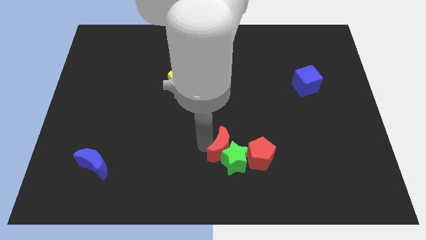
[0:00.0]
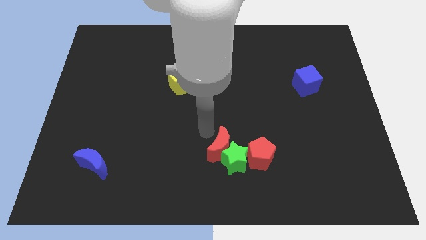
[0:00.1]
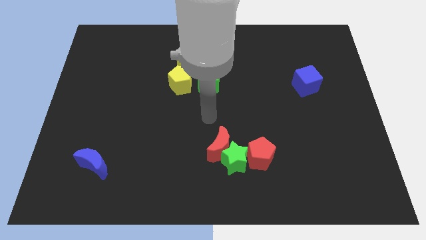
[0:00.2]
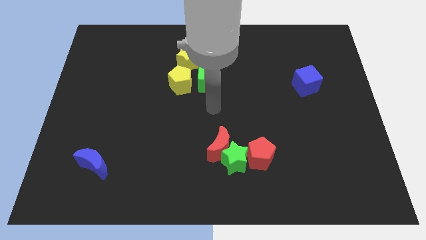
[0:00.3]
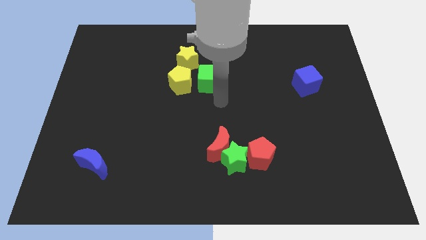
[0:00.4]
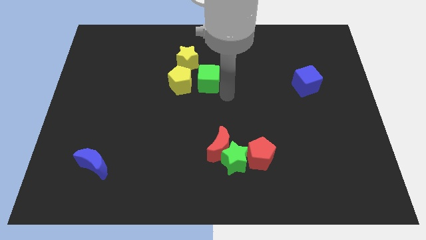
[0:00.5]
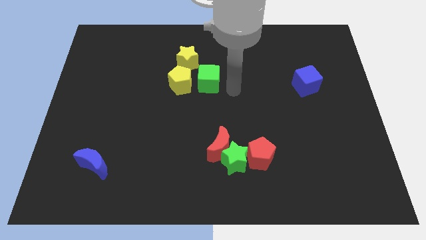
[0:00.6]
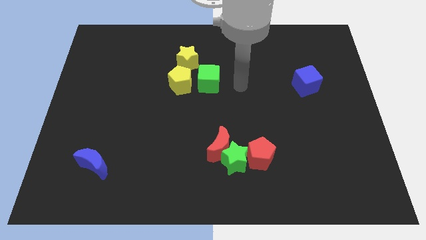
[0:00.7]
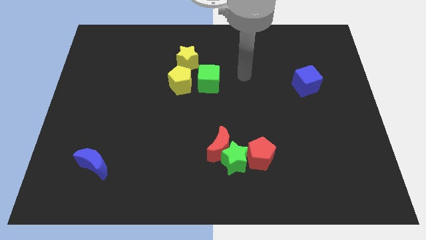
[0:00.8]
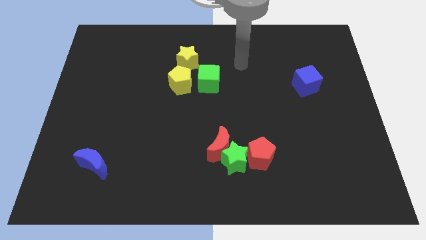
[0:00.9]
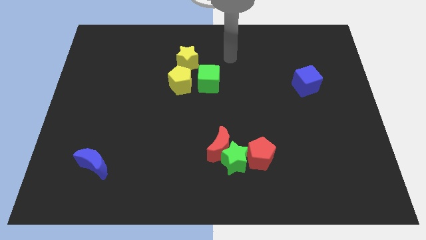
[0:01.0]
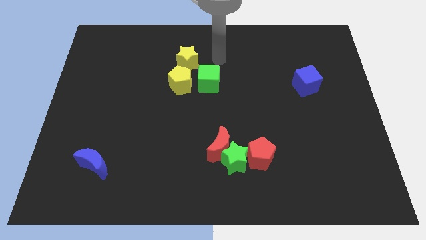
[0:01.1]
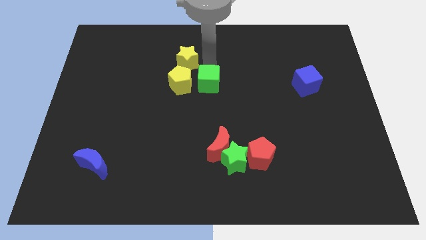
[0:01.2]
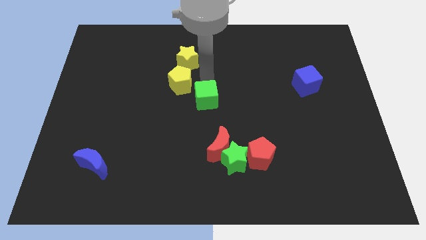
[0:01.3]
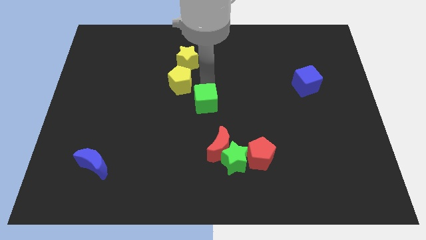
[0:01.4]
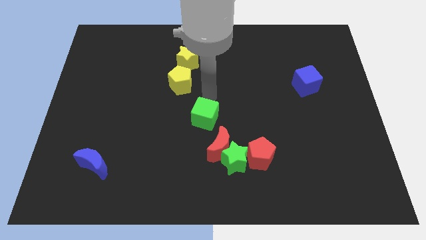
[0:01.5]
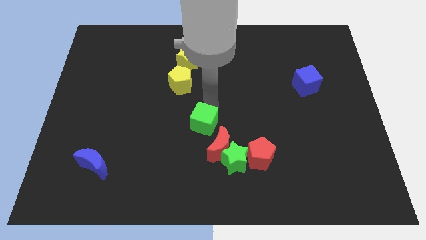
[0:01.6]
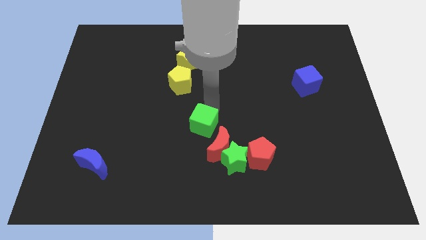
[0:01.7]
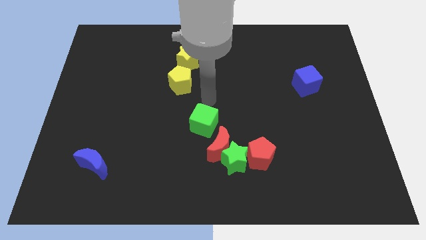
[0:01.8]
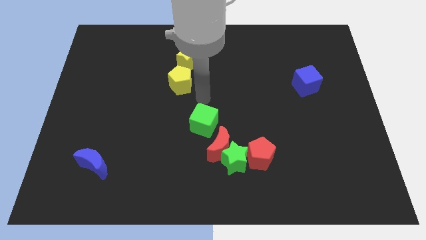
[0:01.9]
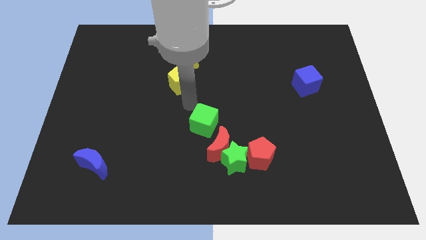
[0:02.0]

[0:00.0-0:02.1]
move the green cube diagonally to the red crescent

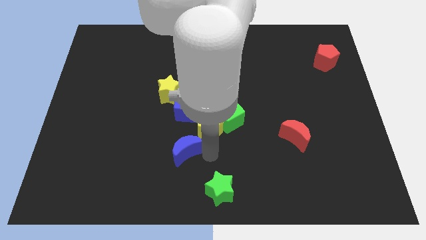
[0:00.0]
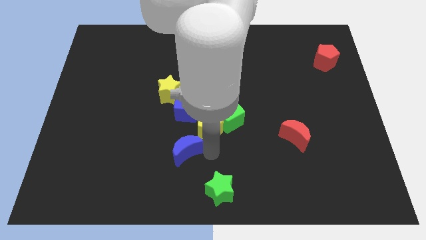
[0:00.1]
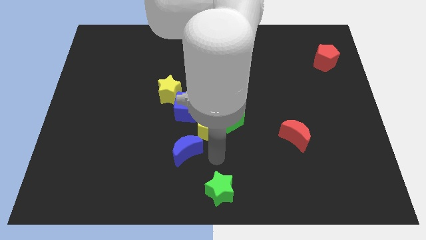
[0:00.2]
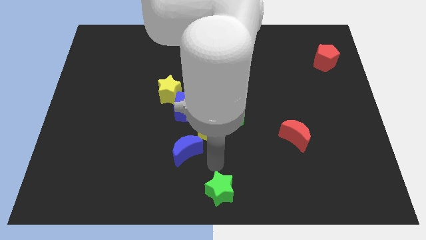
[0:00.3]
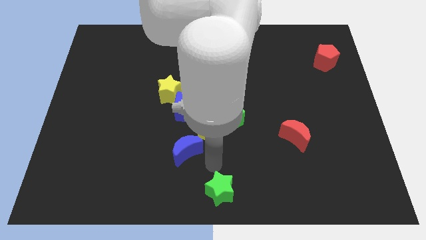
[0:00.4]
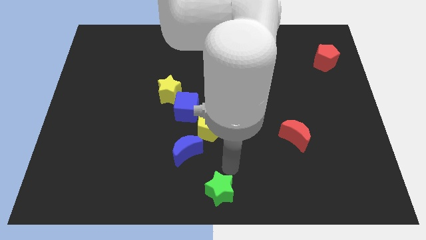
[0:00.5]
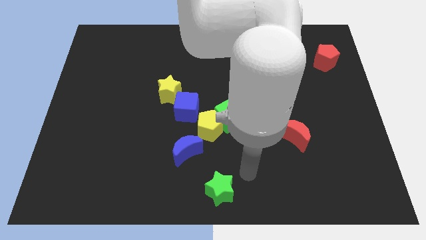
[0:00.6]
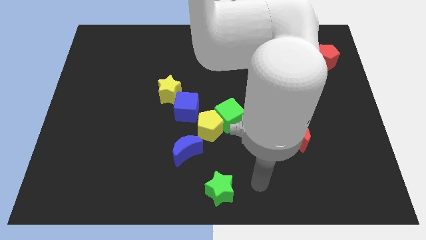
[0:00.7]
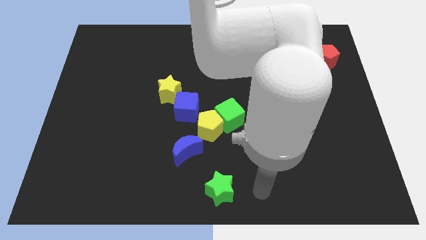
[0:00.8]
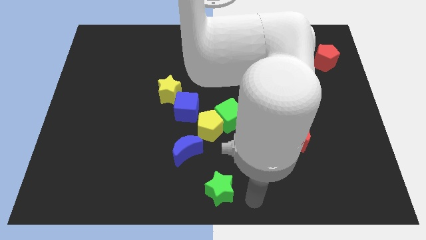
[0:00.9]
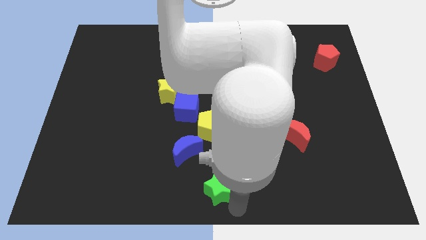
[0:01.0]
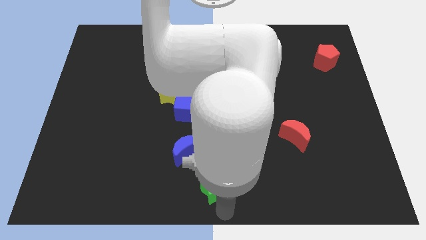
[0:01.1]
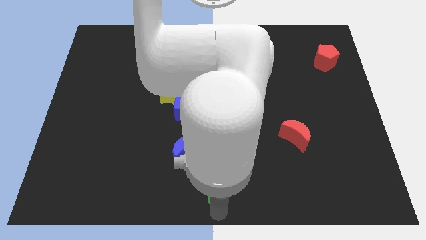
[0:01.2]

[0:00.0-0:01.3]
move your arm away from the blue moon

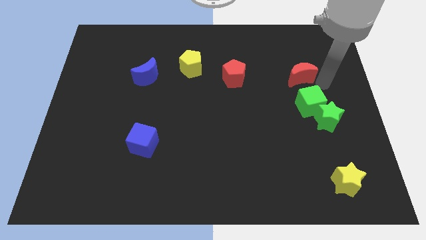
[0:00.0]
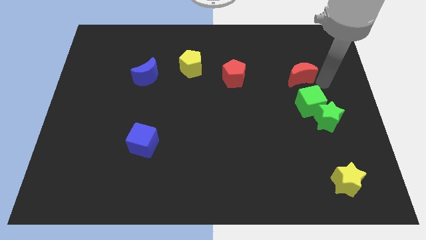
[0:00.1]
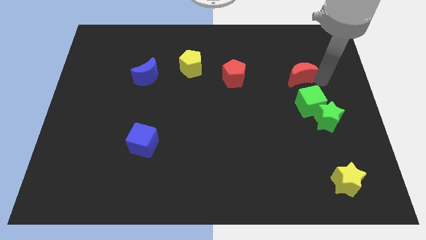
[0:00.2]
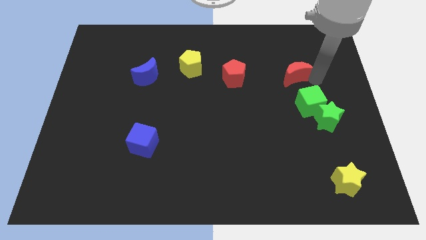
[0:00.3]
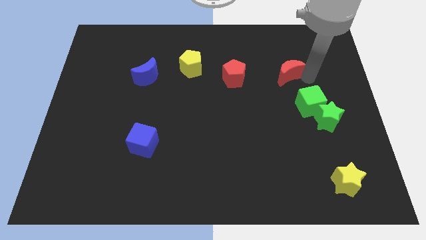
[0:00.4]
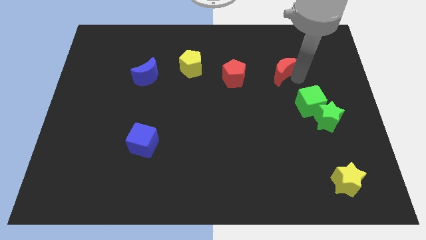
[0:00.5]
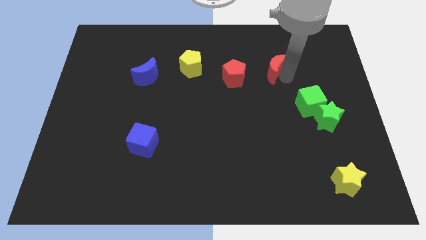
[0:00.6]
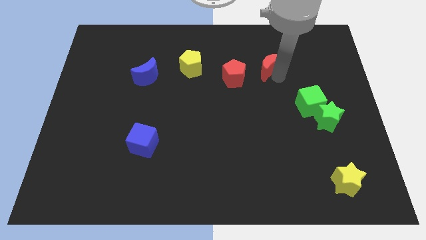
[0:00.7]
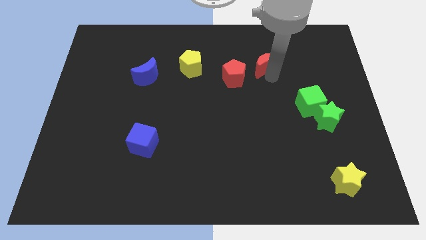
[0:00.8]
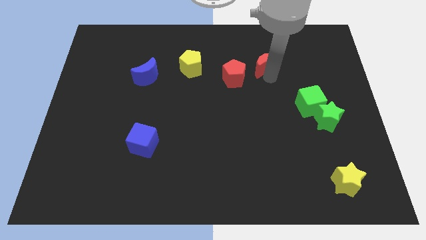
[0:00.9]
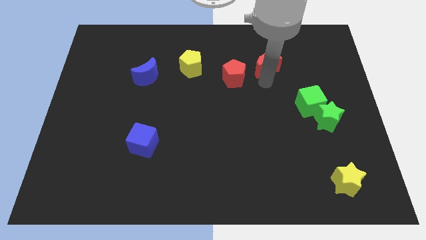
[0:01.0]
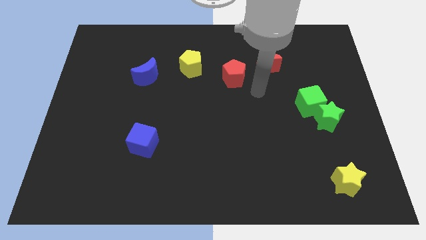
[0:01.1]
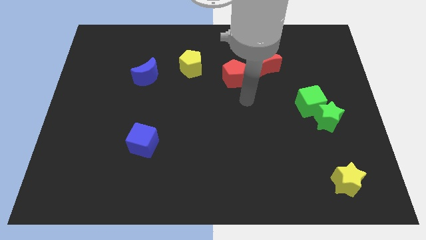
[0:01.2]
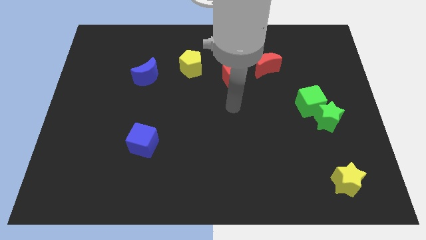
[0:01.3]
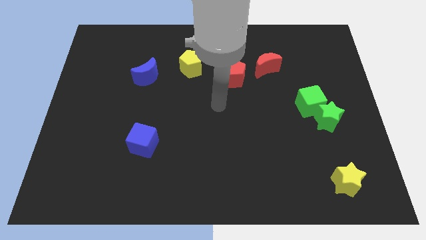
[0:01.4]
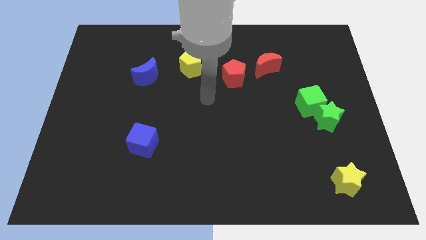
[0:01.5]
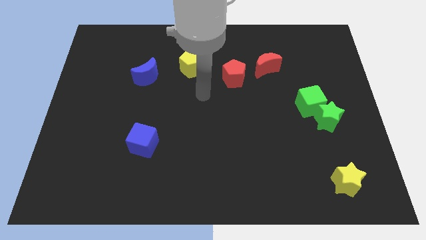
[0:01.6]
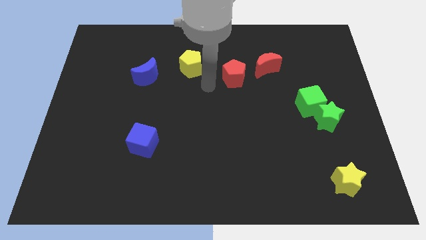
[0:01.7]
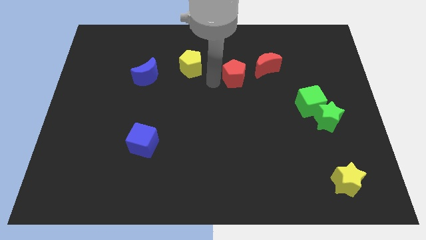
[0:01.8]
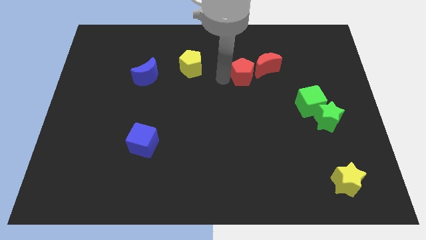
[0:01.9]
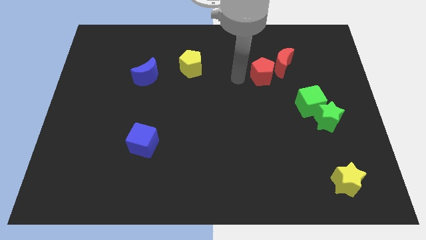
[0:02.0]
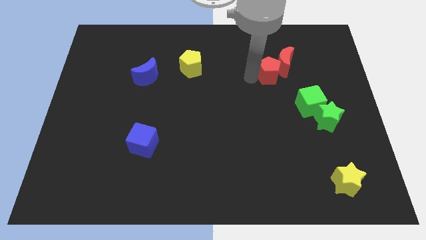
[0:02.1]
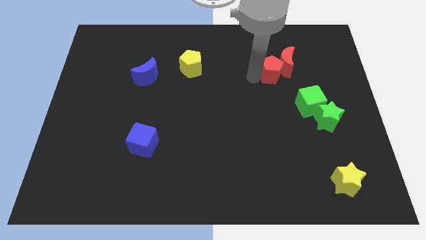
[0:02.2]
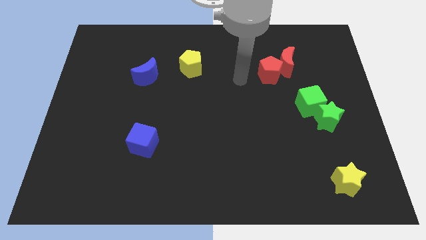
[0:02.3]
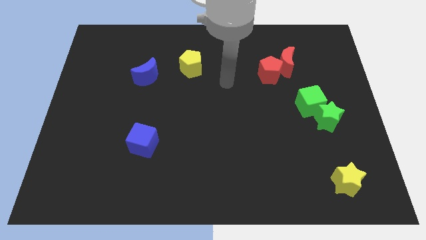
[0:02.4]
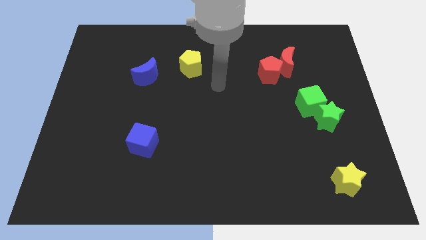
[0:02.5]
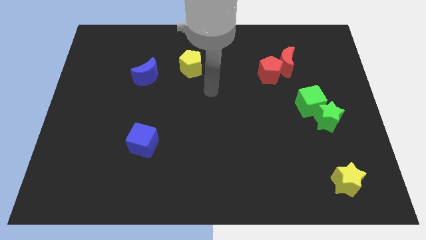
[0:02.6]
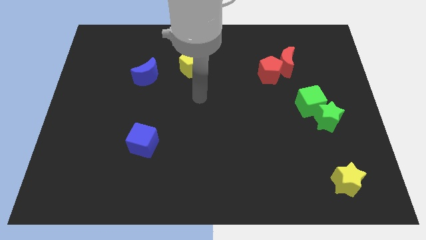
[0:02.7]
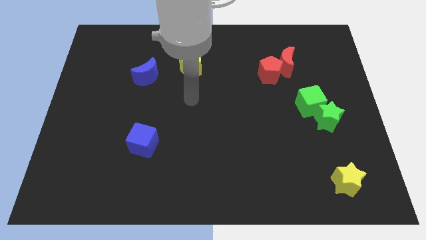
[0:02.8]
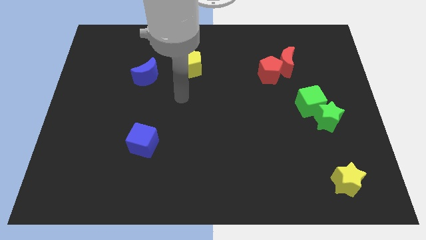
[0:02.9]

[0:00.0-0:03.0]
move red crescent and the red pentagon close to each other

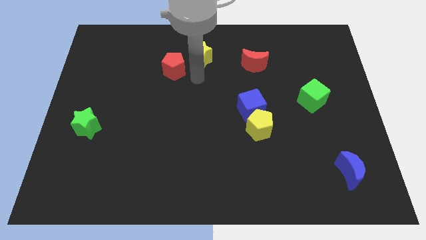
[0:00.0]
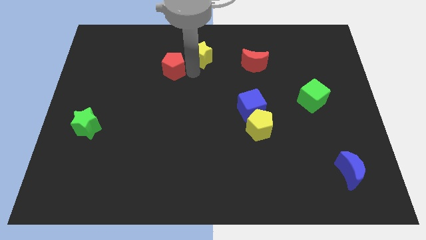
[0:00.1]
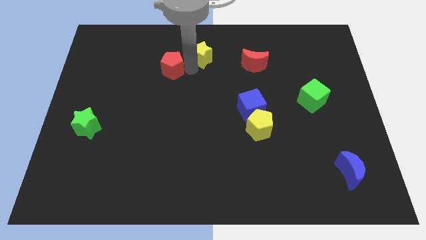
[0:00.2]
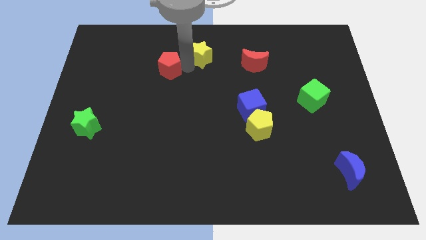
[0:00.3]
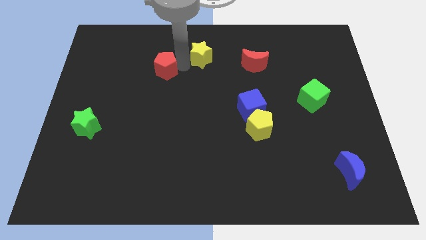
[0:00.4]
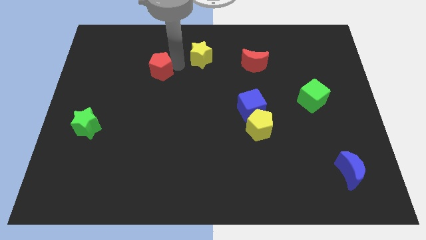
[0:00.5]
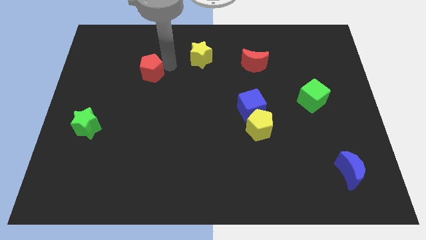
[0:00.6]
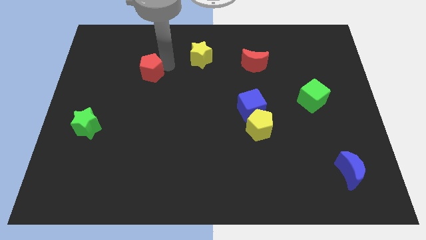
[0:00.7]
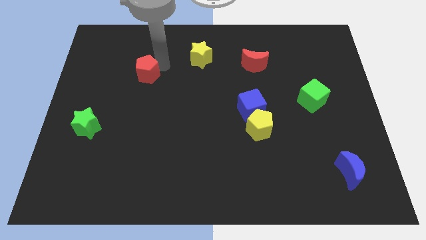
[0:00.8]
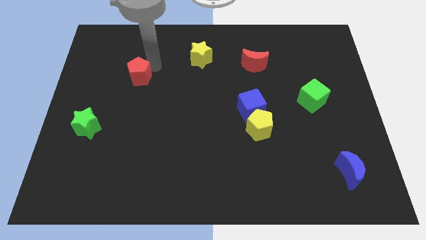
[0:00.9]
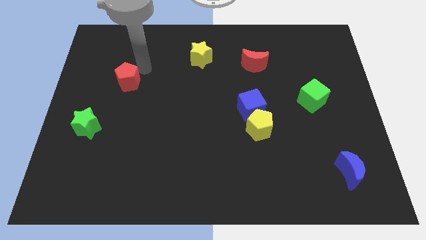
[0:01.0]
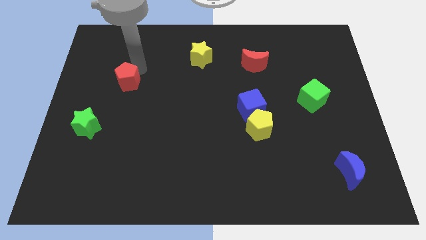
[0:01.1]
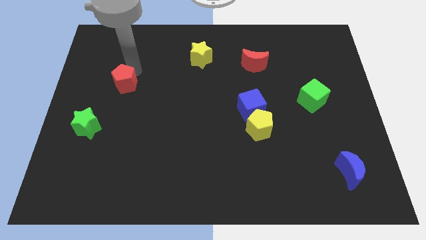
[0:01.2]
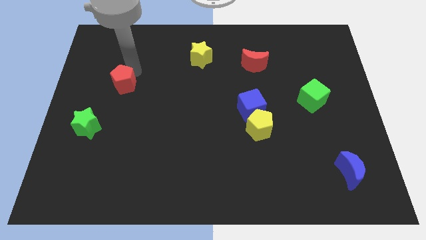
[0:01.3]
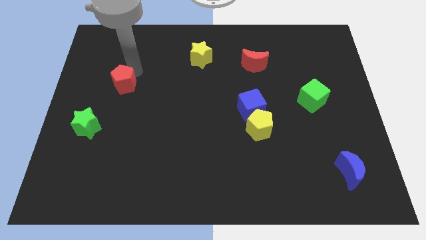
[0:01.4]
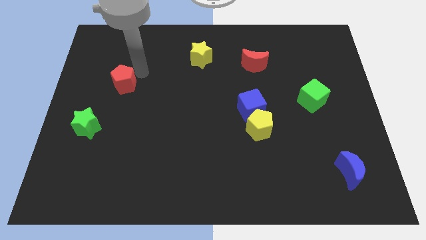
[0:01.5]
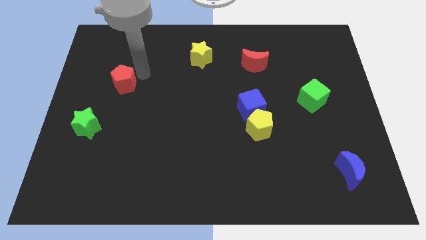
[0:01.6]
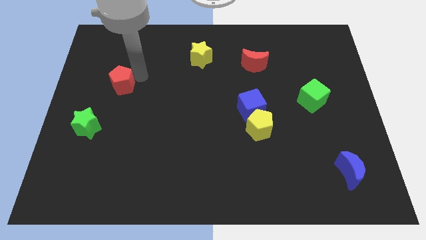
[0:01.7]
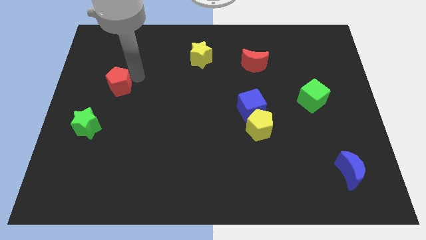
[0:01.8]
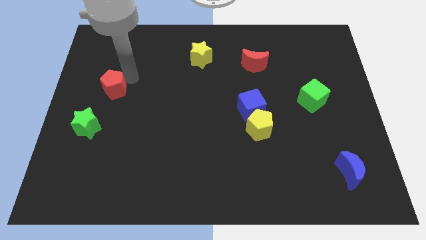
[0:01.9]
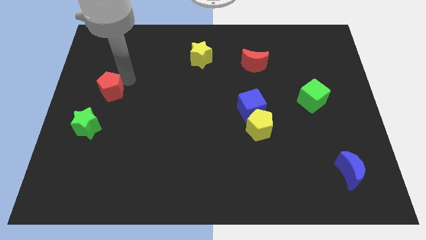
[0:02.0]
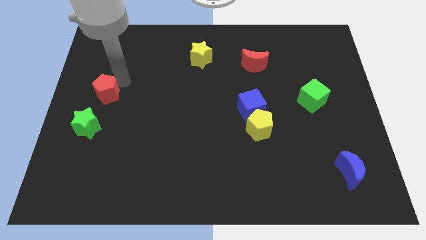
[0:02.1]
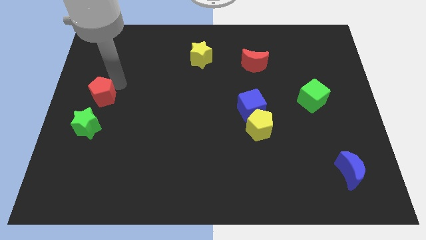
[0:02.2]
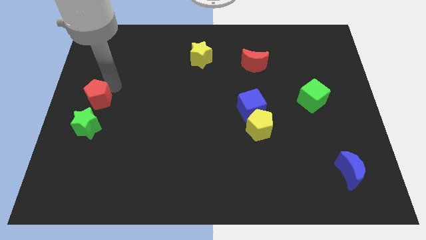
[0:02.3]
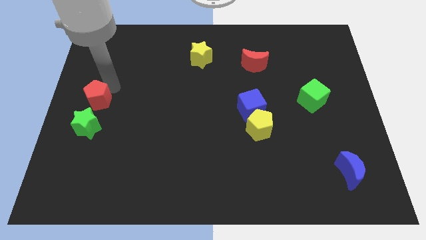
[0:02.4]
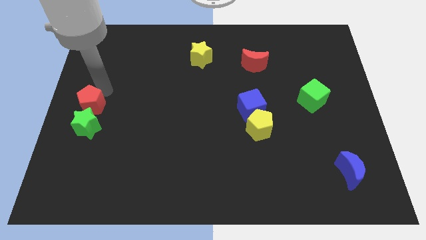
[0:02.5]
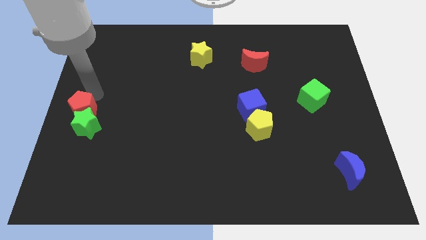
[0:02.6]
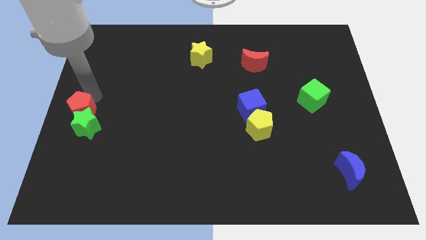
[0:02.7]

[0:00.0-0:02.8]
place red pentagon above green star

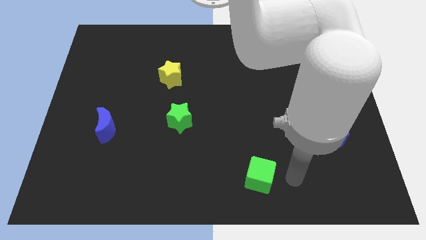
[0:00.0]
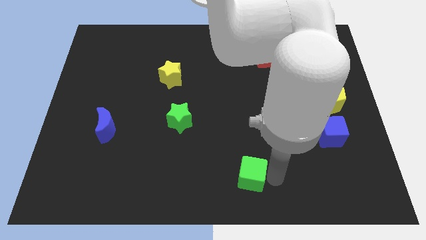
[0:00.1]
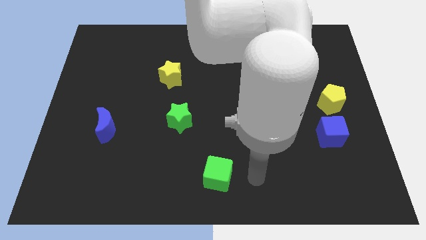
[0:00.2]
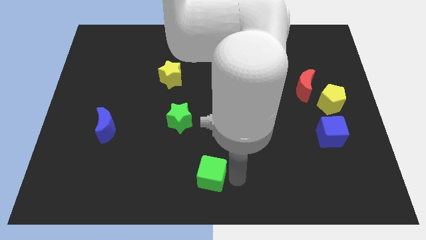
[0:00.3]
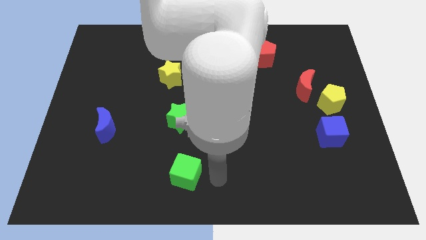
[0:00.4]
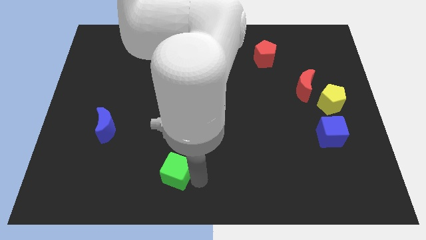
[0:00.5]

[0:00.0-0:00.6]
place the green cube below the green star
